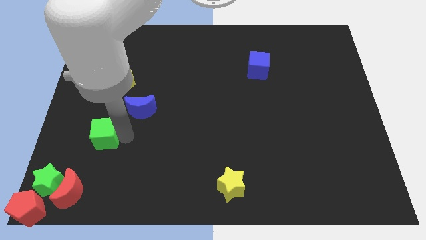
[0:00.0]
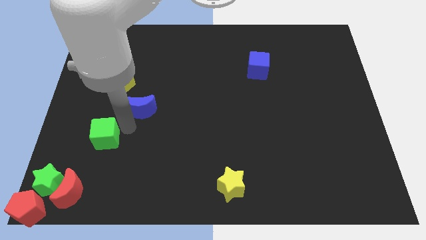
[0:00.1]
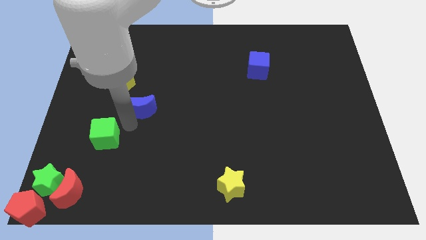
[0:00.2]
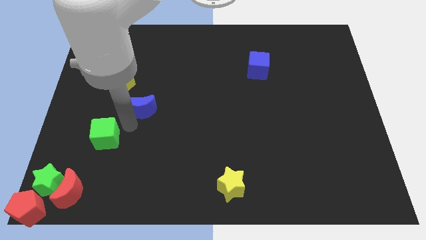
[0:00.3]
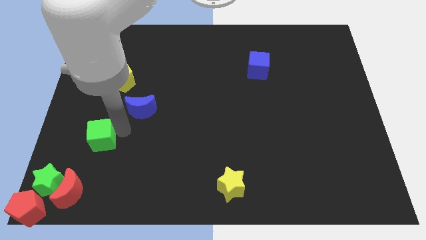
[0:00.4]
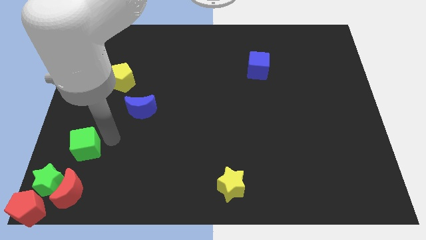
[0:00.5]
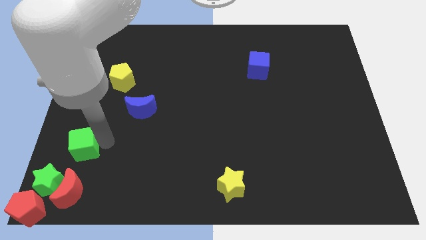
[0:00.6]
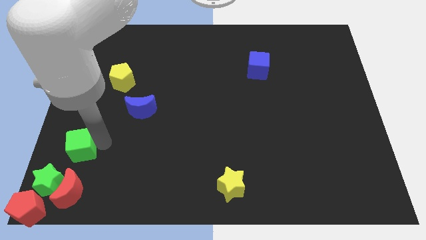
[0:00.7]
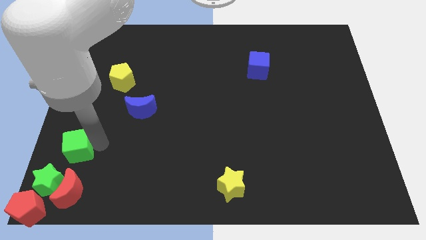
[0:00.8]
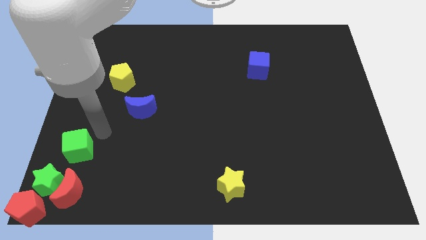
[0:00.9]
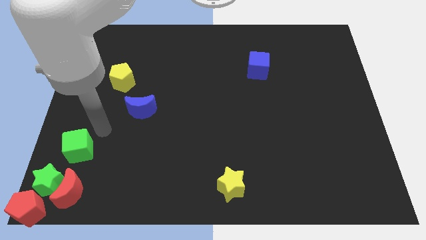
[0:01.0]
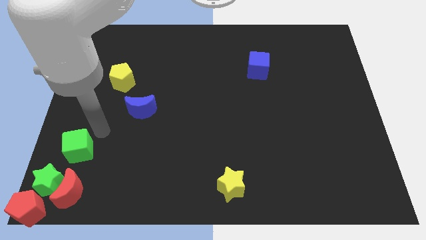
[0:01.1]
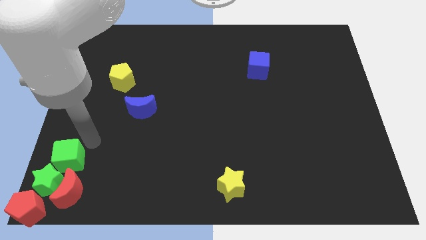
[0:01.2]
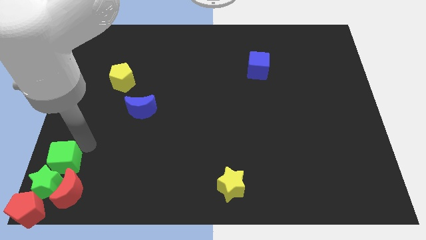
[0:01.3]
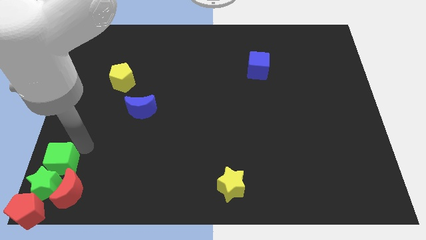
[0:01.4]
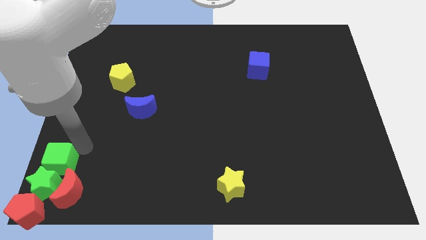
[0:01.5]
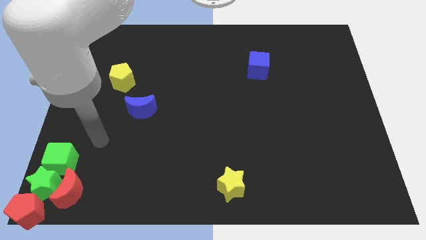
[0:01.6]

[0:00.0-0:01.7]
drag the green cube into the group of blocks

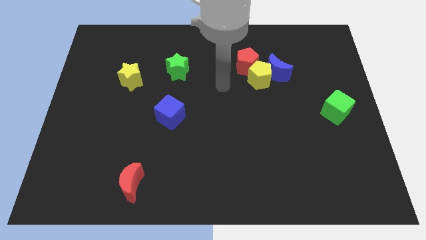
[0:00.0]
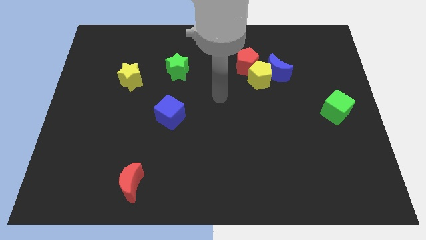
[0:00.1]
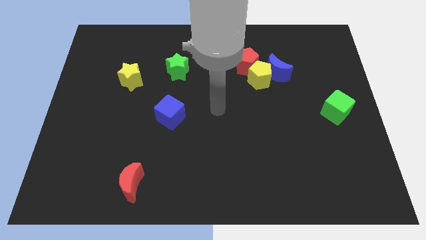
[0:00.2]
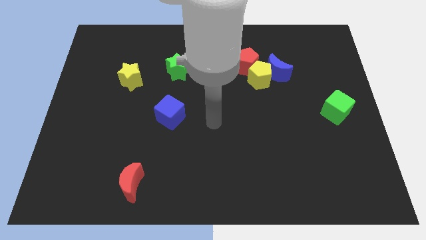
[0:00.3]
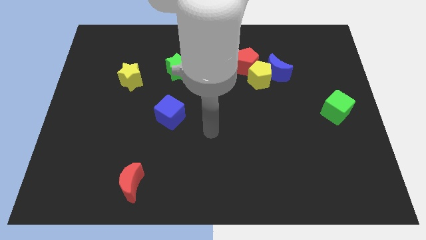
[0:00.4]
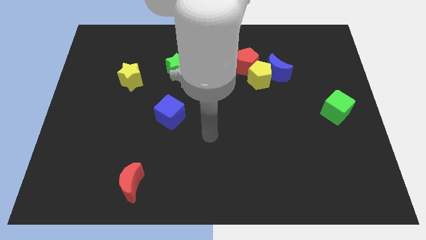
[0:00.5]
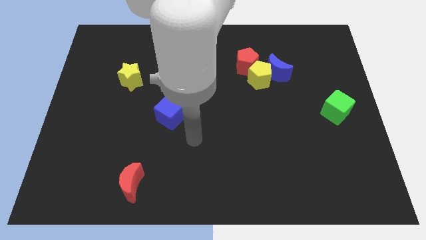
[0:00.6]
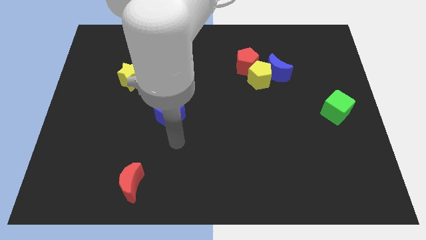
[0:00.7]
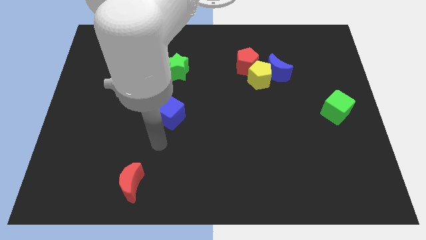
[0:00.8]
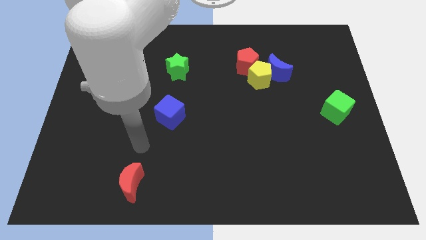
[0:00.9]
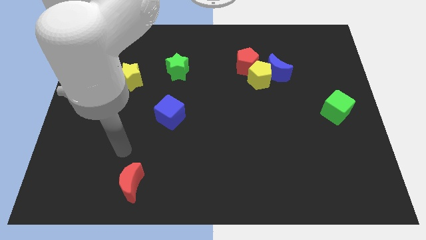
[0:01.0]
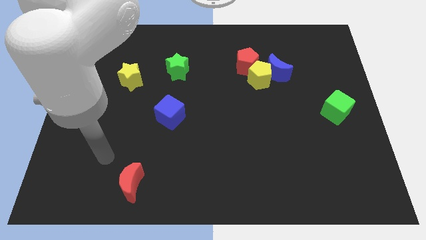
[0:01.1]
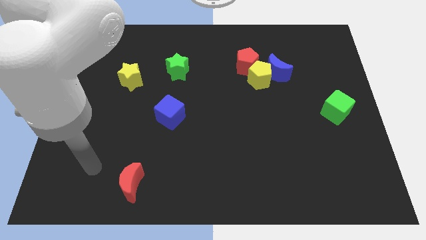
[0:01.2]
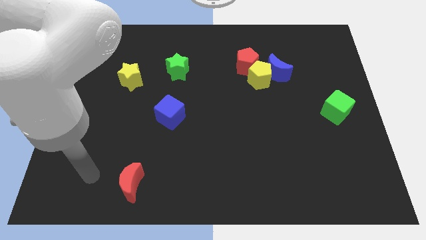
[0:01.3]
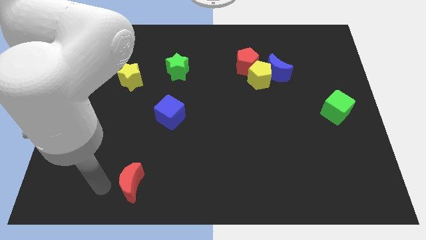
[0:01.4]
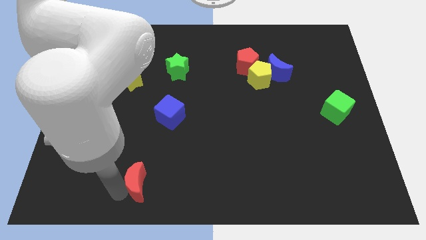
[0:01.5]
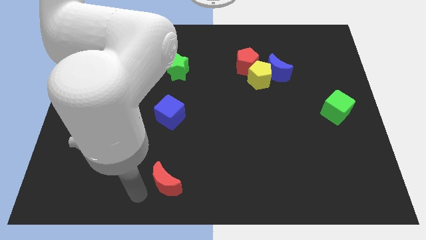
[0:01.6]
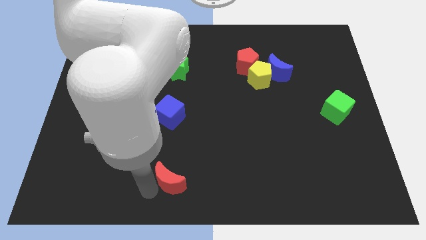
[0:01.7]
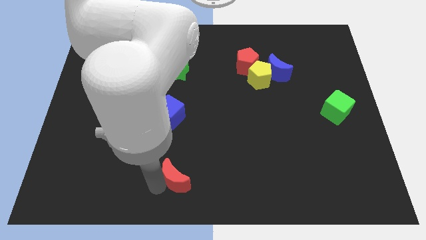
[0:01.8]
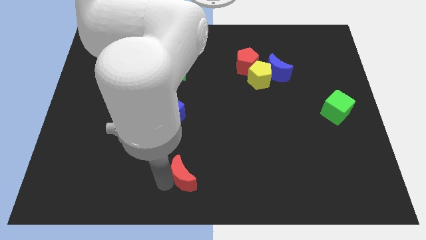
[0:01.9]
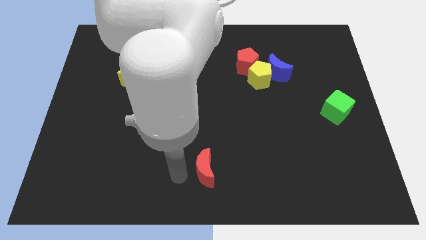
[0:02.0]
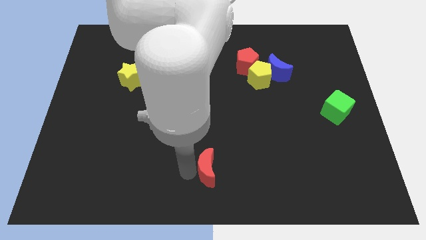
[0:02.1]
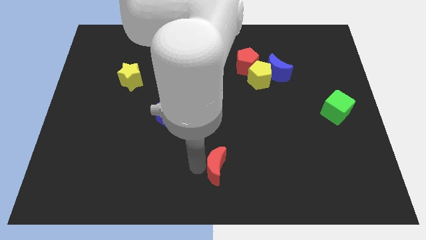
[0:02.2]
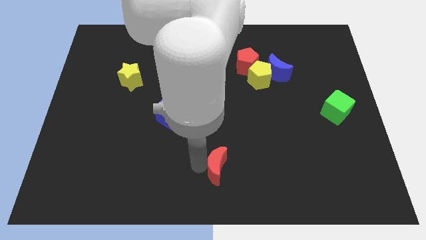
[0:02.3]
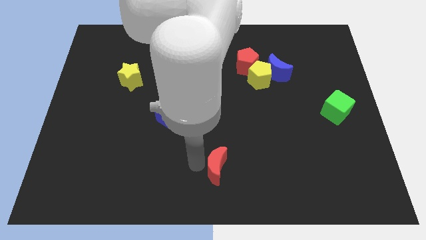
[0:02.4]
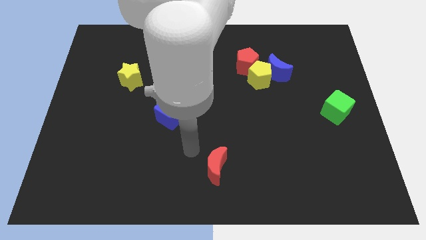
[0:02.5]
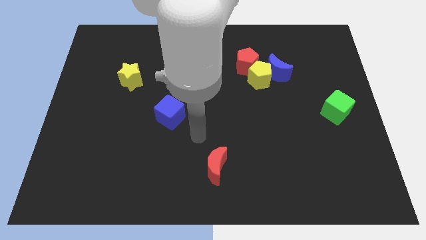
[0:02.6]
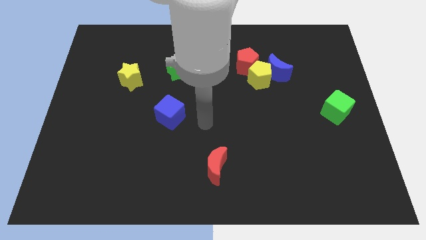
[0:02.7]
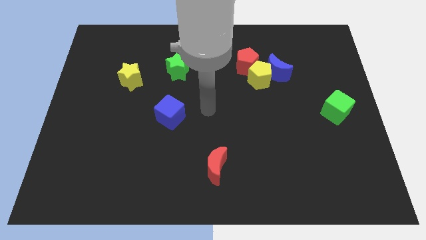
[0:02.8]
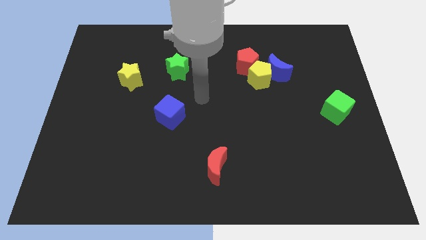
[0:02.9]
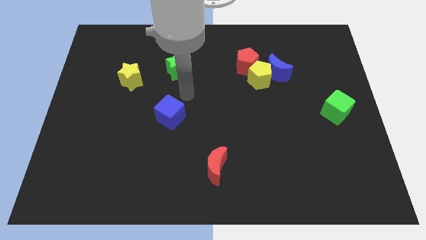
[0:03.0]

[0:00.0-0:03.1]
push the red crescent to the bottom right of the blue cube

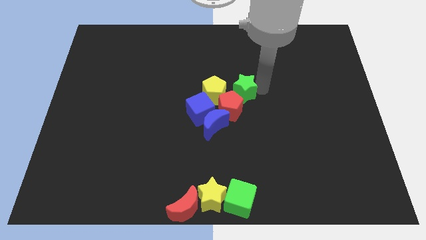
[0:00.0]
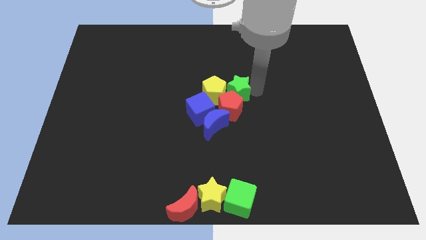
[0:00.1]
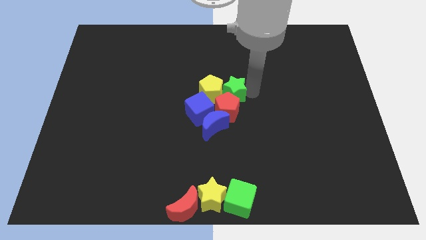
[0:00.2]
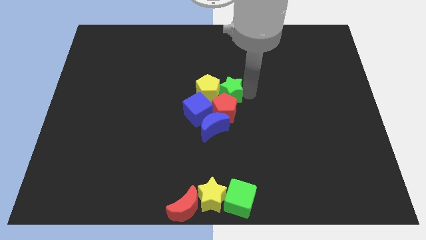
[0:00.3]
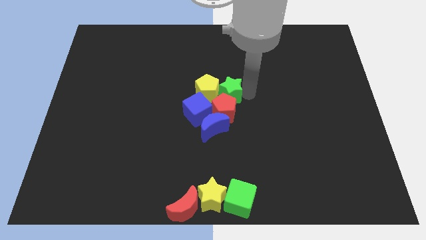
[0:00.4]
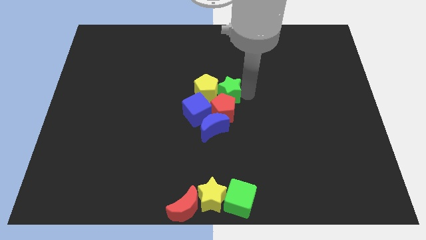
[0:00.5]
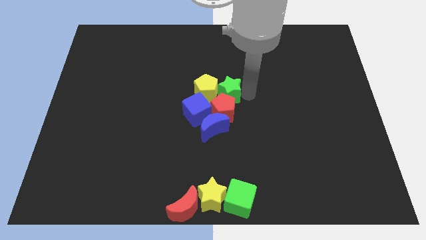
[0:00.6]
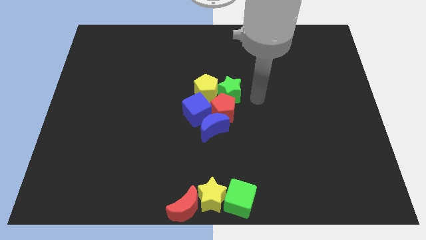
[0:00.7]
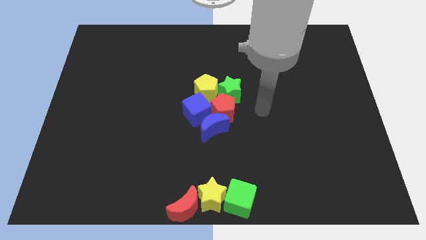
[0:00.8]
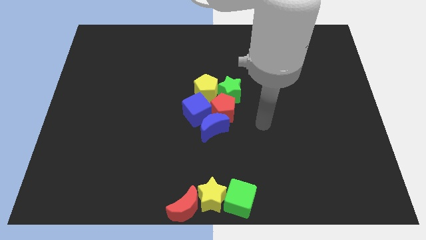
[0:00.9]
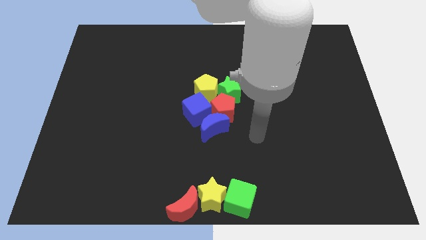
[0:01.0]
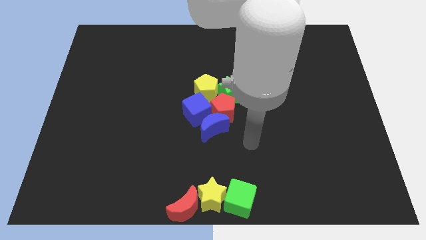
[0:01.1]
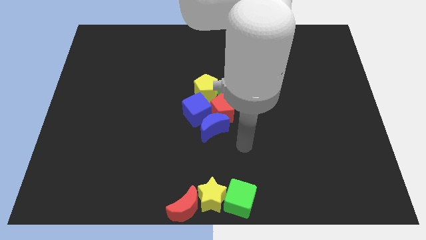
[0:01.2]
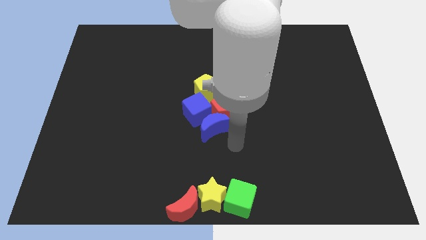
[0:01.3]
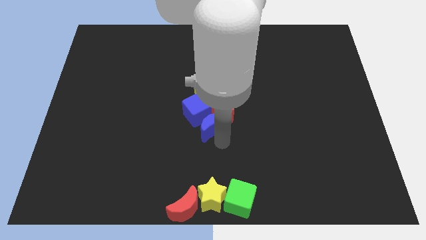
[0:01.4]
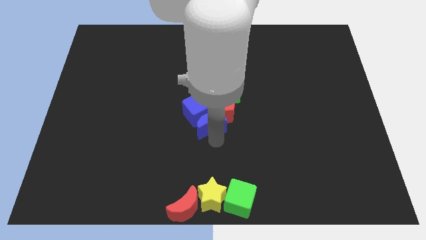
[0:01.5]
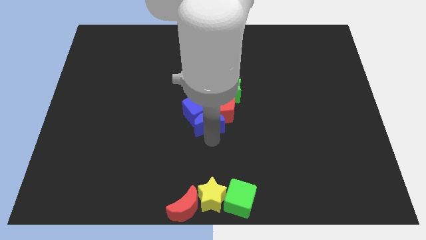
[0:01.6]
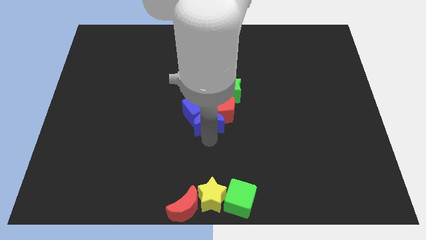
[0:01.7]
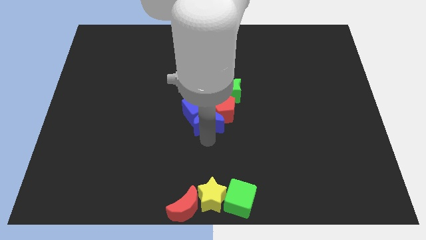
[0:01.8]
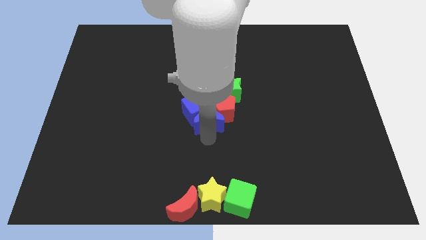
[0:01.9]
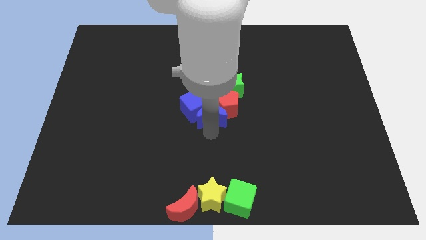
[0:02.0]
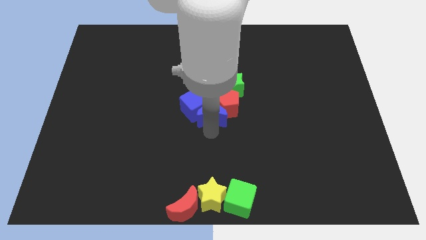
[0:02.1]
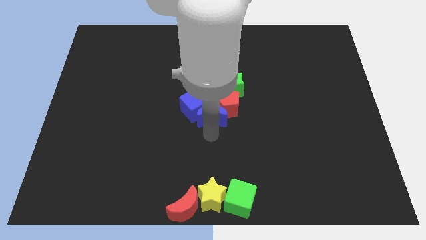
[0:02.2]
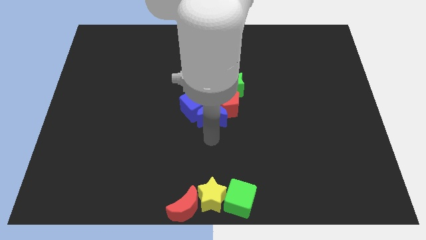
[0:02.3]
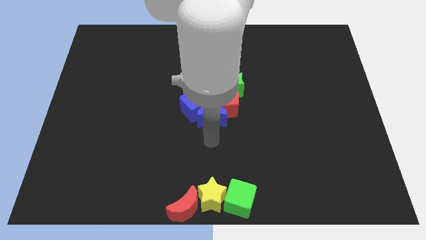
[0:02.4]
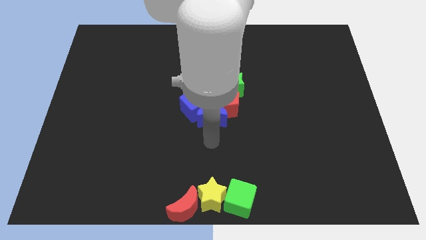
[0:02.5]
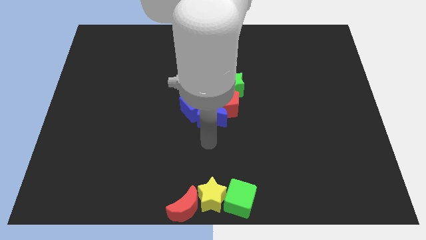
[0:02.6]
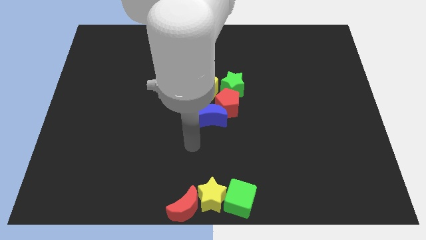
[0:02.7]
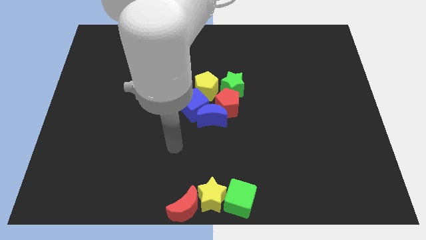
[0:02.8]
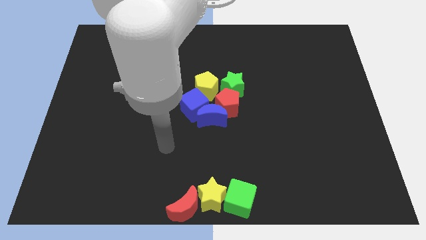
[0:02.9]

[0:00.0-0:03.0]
move the blue moon upwards slightly

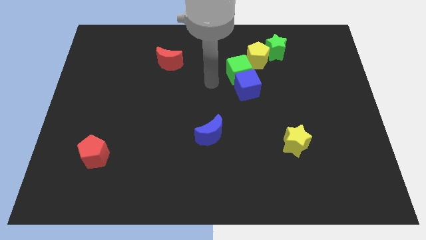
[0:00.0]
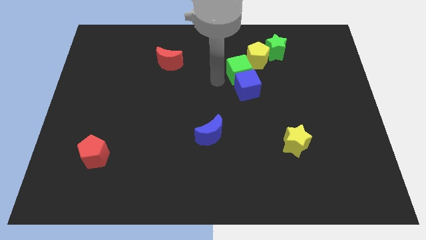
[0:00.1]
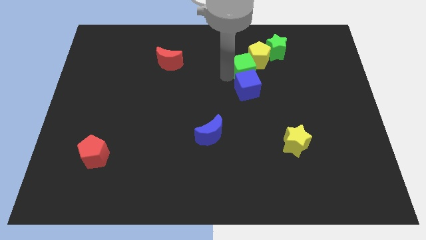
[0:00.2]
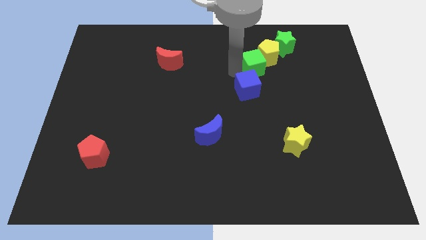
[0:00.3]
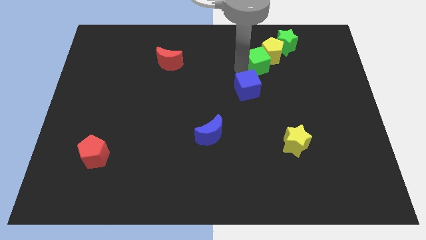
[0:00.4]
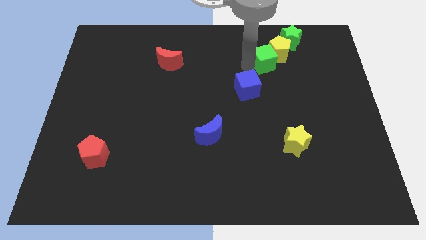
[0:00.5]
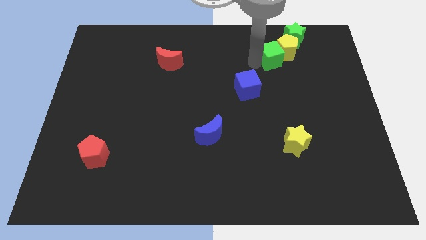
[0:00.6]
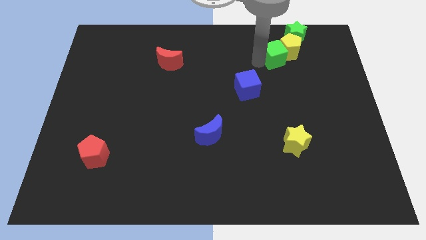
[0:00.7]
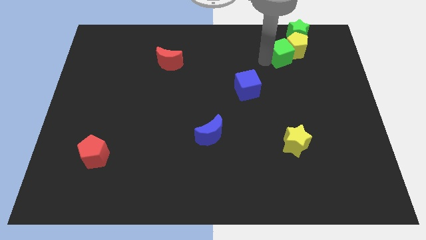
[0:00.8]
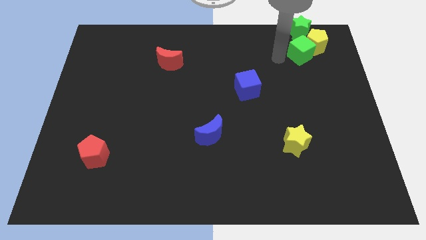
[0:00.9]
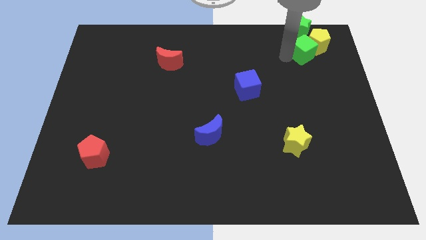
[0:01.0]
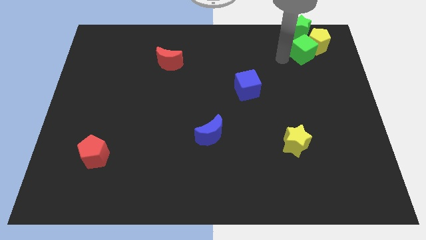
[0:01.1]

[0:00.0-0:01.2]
slightly push the green cube and the yellow pentagon towards the top right of the board
